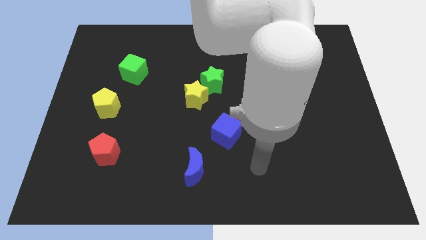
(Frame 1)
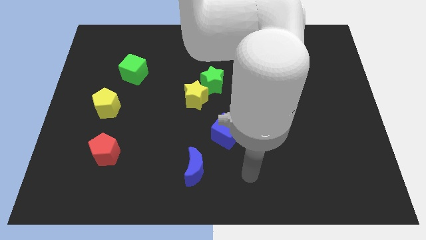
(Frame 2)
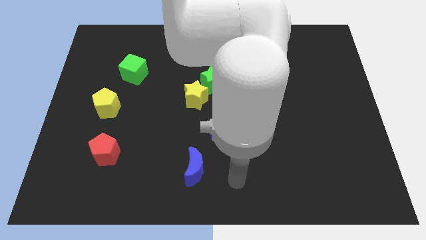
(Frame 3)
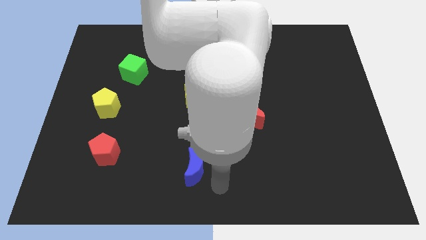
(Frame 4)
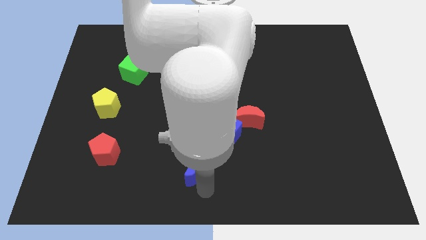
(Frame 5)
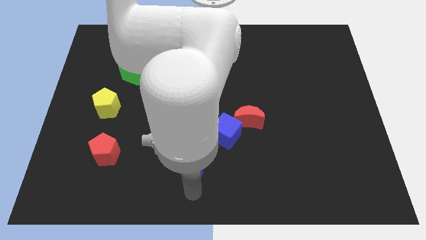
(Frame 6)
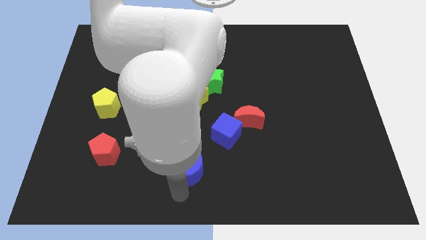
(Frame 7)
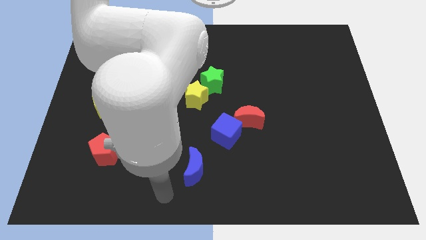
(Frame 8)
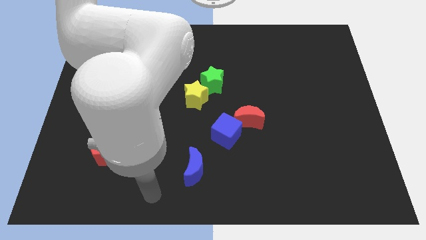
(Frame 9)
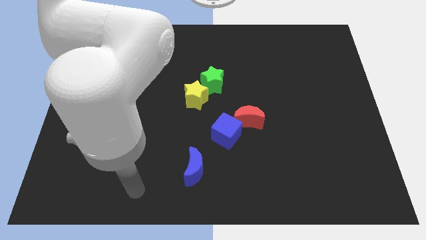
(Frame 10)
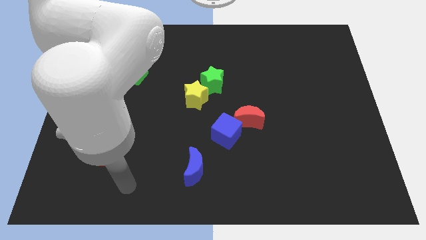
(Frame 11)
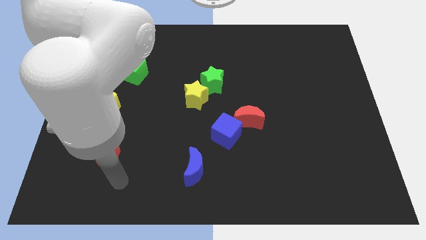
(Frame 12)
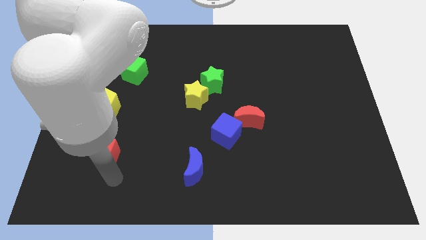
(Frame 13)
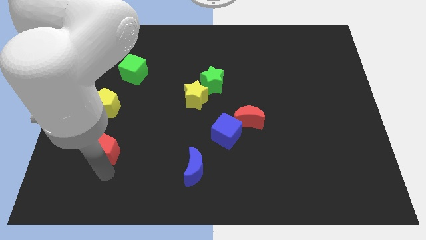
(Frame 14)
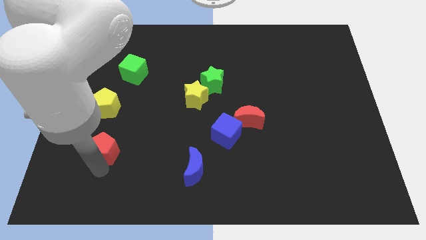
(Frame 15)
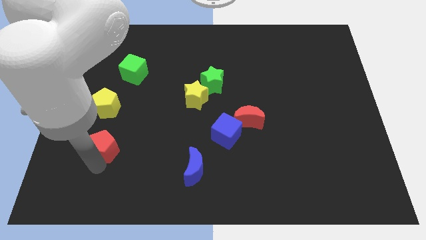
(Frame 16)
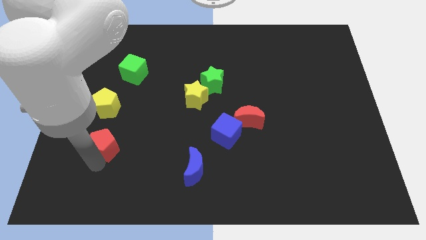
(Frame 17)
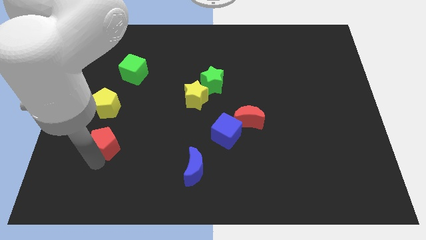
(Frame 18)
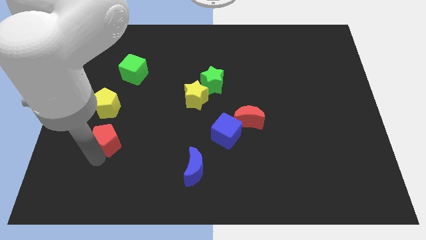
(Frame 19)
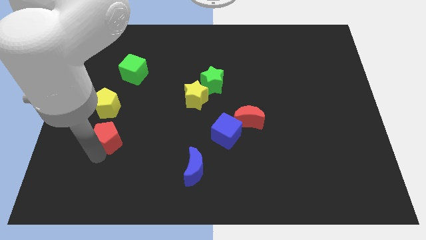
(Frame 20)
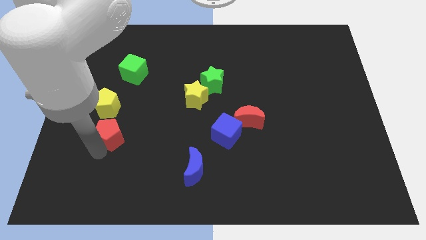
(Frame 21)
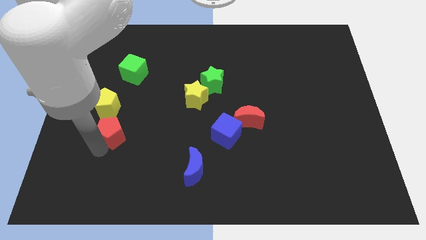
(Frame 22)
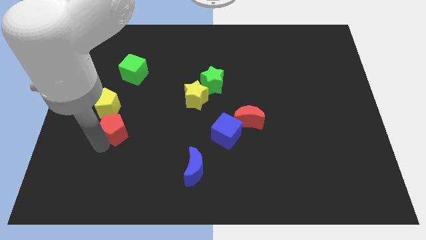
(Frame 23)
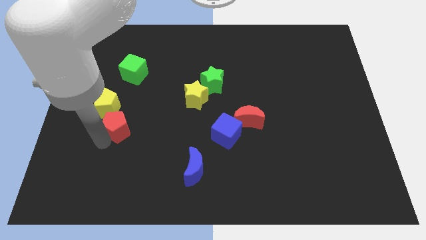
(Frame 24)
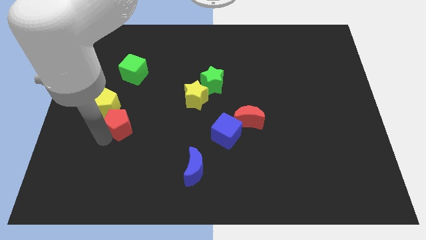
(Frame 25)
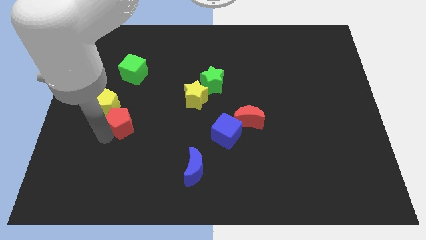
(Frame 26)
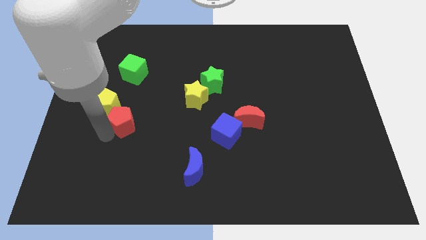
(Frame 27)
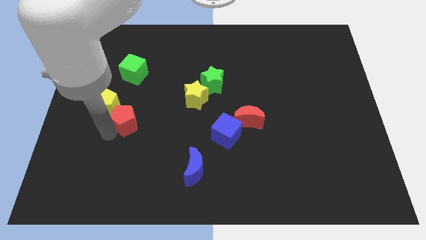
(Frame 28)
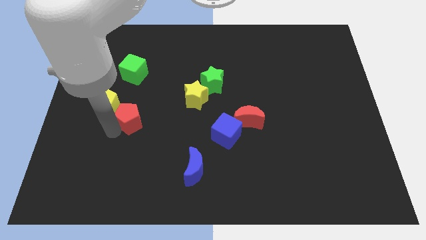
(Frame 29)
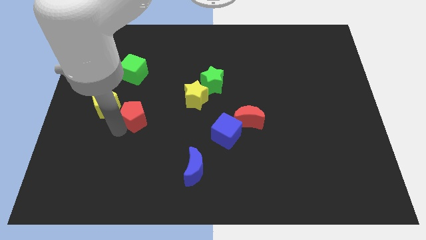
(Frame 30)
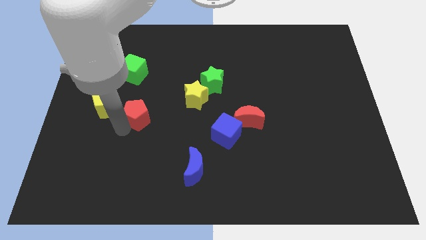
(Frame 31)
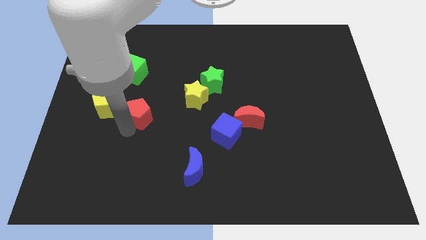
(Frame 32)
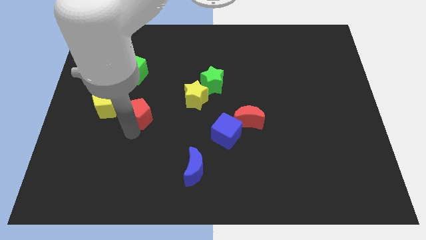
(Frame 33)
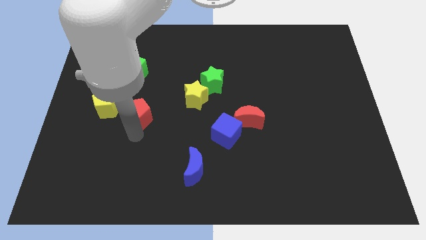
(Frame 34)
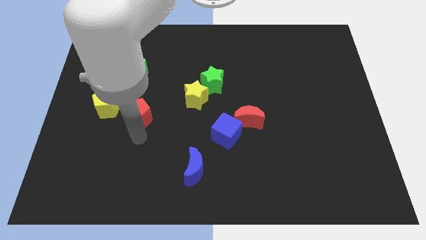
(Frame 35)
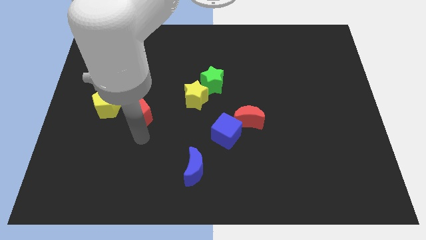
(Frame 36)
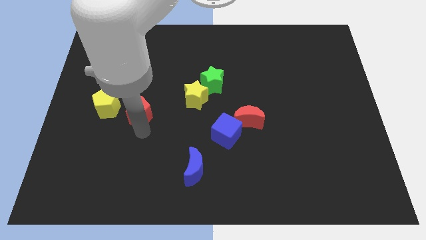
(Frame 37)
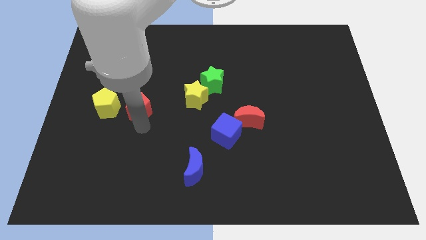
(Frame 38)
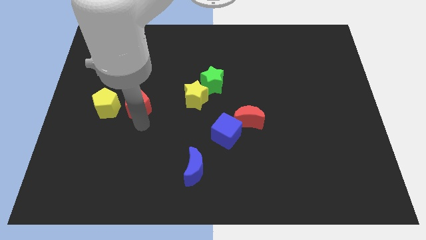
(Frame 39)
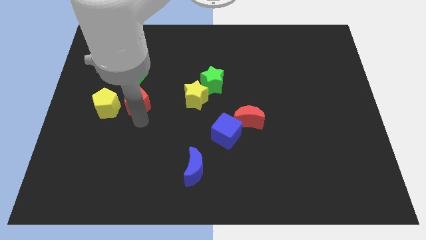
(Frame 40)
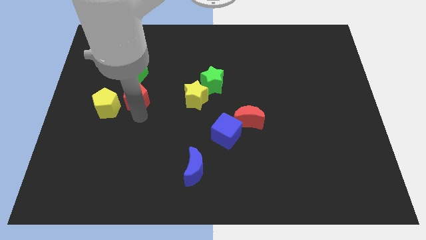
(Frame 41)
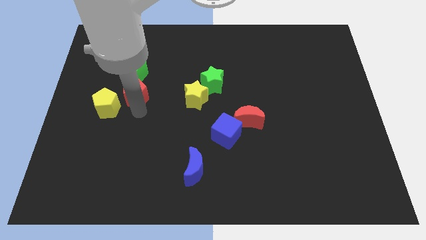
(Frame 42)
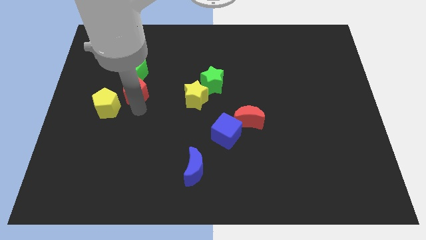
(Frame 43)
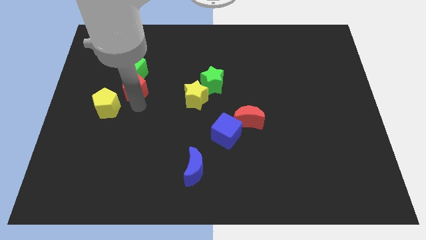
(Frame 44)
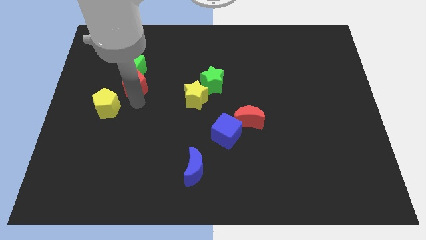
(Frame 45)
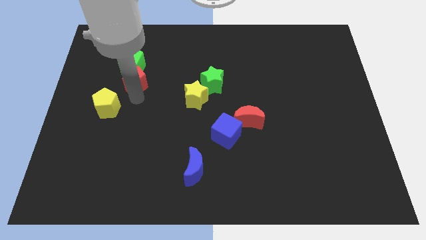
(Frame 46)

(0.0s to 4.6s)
put the red pentagon close to the green cube

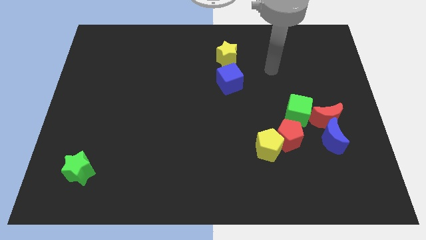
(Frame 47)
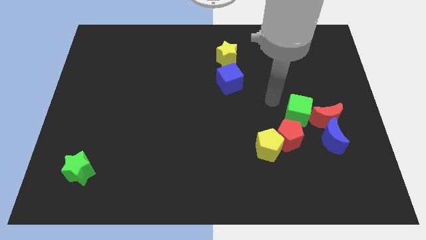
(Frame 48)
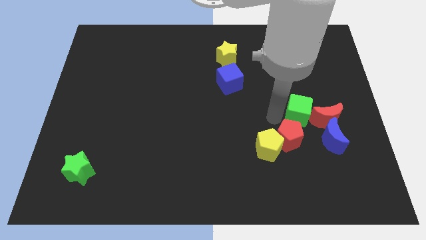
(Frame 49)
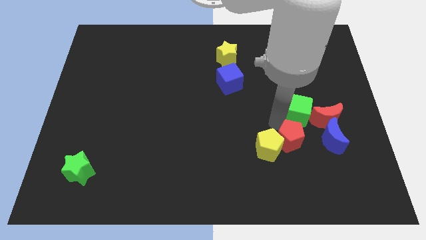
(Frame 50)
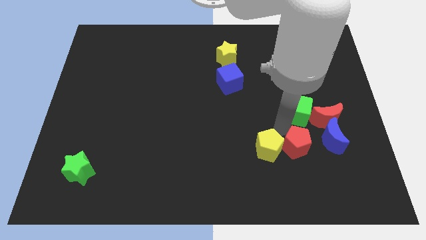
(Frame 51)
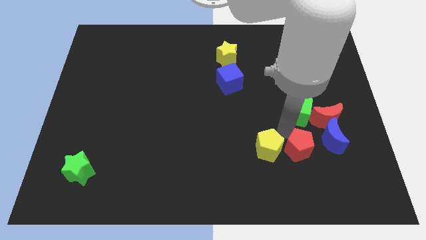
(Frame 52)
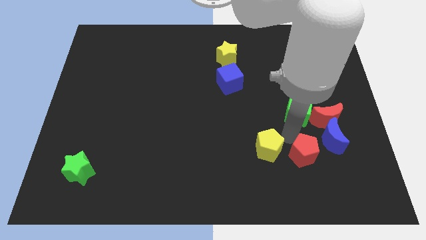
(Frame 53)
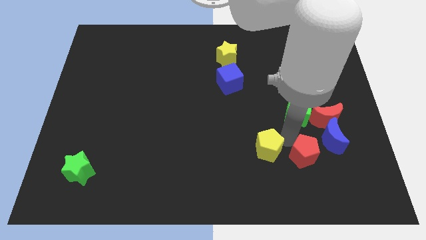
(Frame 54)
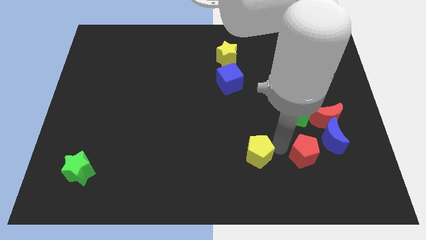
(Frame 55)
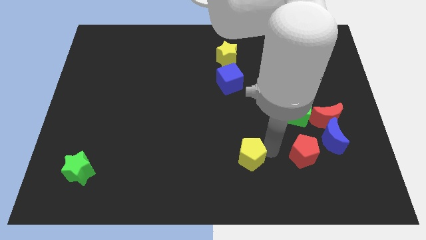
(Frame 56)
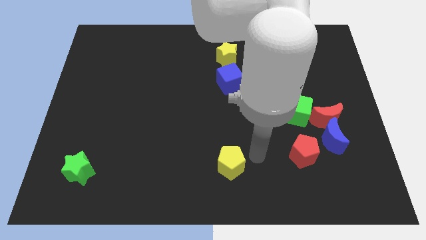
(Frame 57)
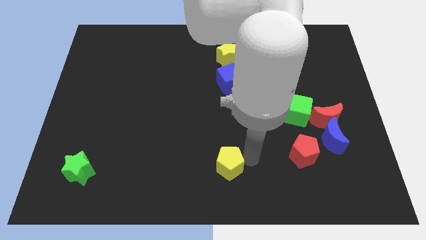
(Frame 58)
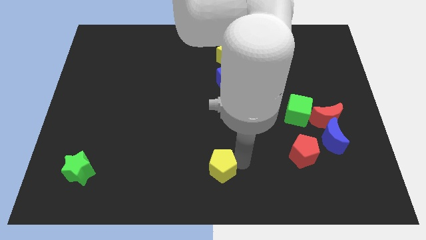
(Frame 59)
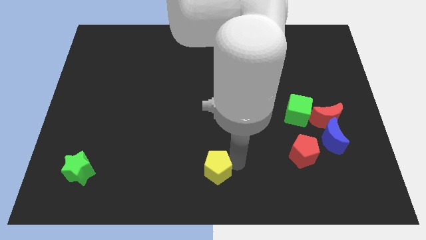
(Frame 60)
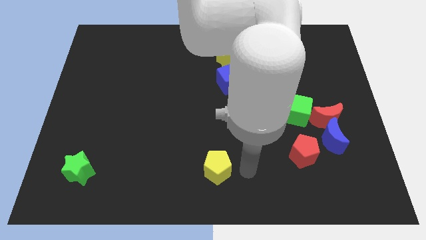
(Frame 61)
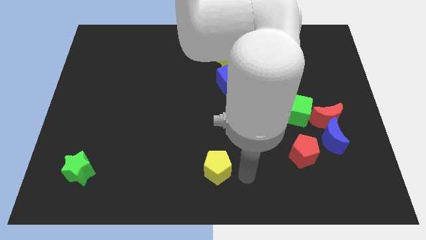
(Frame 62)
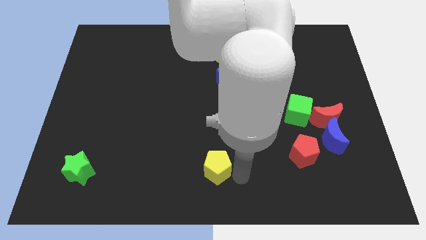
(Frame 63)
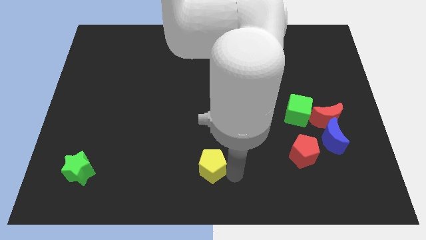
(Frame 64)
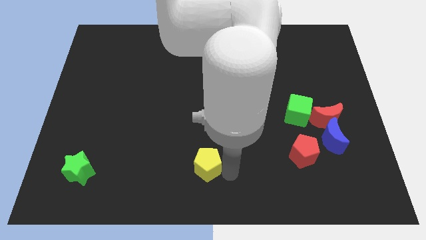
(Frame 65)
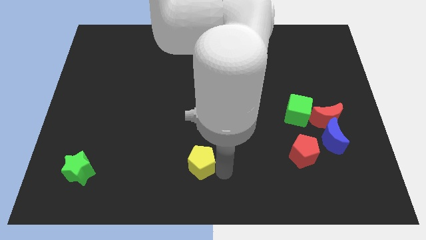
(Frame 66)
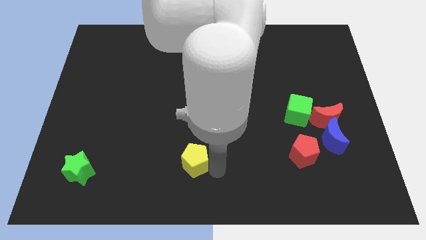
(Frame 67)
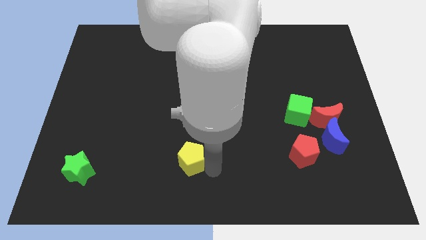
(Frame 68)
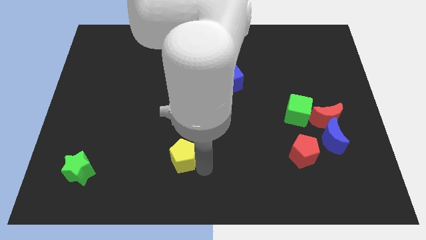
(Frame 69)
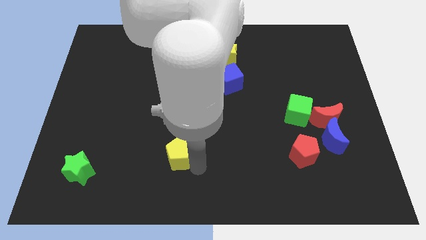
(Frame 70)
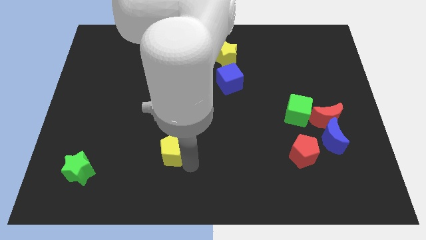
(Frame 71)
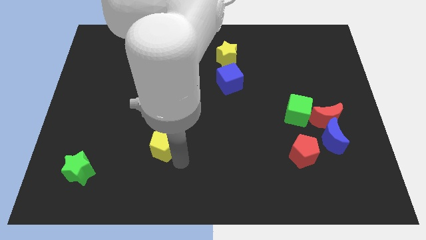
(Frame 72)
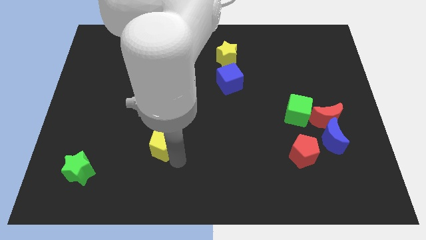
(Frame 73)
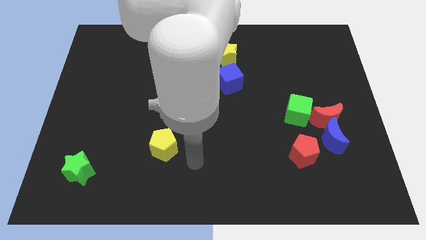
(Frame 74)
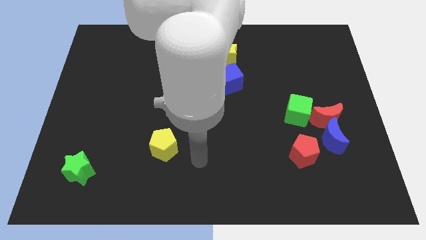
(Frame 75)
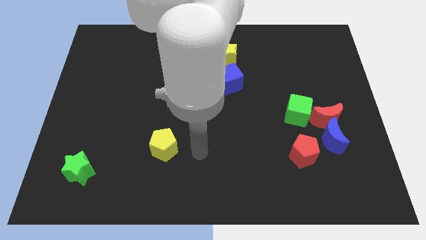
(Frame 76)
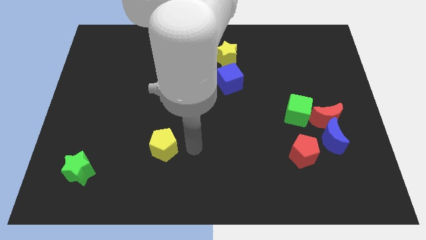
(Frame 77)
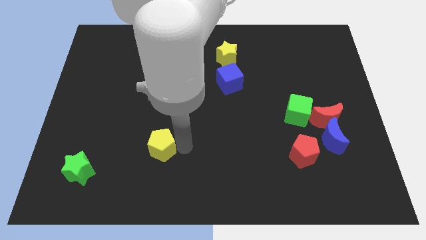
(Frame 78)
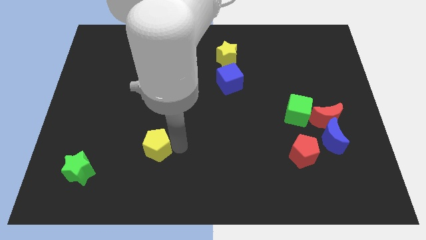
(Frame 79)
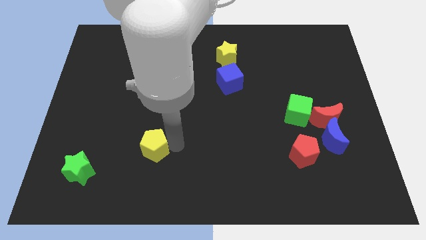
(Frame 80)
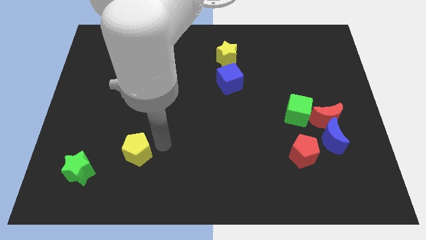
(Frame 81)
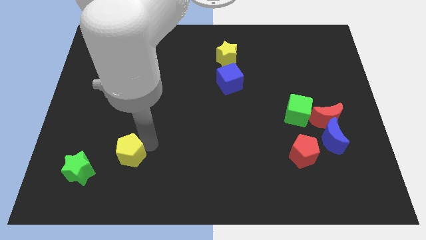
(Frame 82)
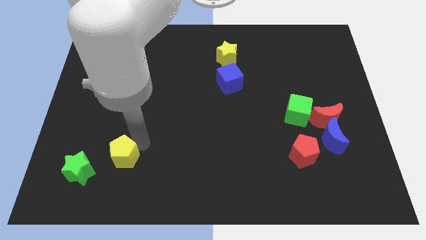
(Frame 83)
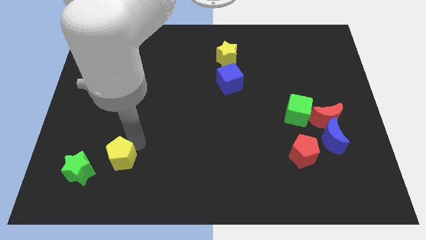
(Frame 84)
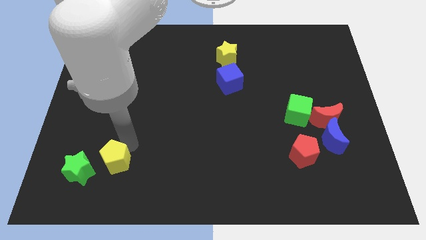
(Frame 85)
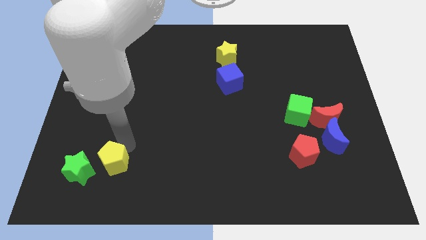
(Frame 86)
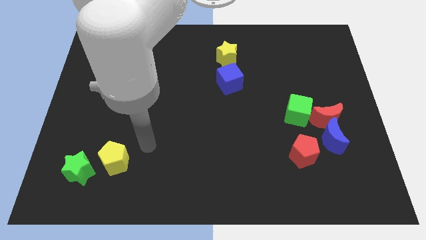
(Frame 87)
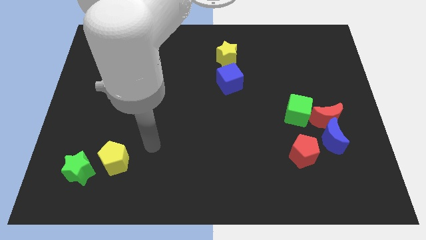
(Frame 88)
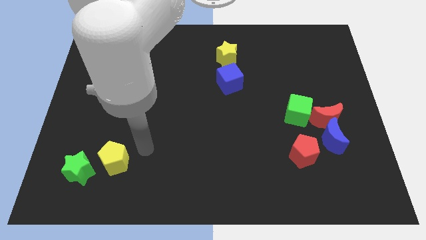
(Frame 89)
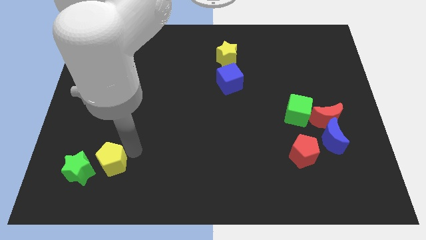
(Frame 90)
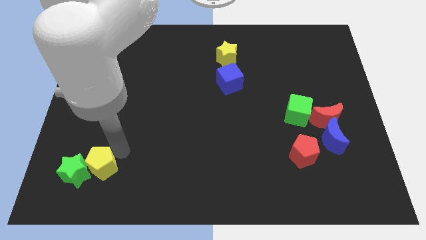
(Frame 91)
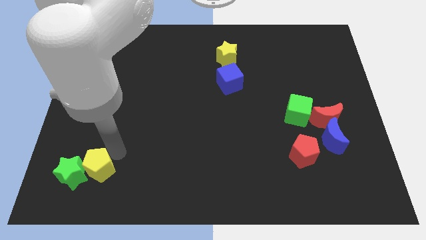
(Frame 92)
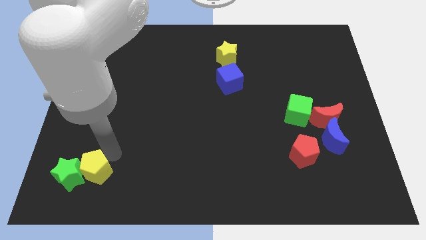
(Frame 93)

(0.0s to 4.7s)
put the yellow pentagon towards the green star
